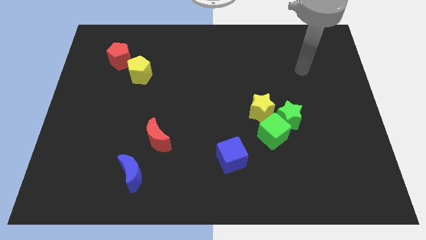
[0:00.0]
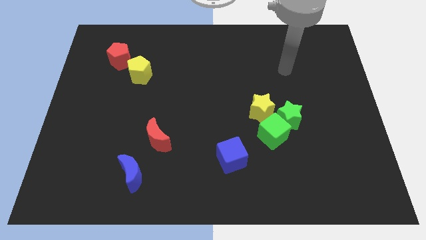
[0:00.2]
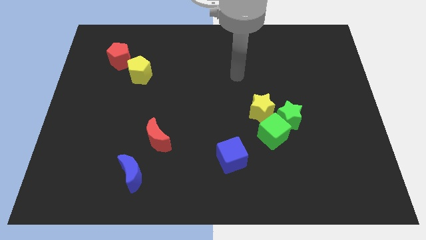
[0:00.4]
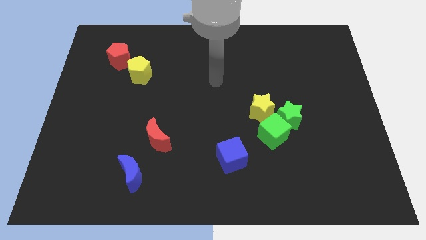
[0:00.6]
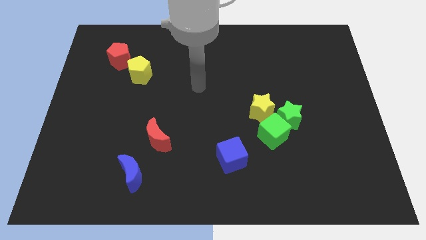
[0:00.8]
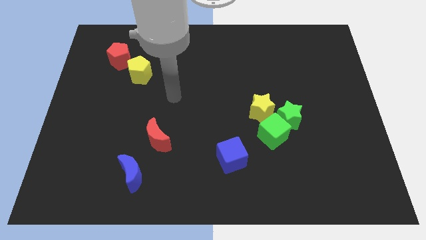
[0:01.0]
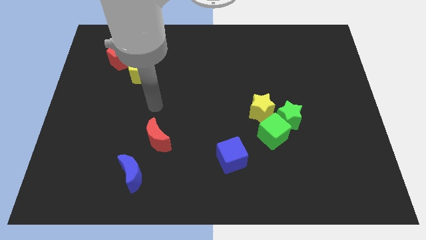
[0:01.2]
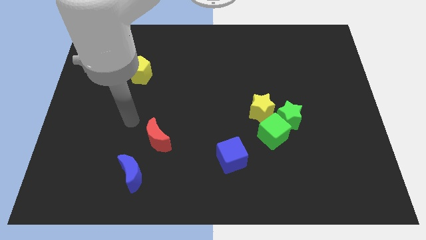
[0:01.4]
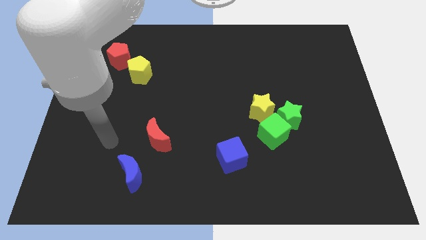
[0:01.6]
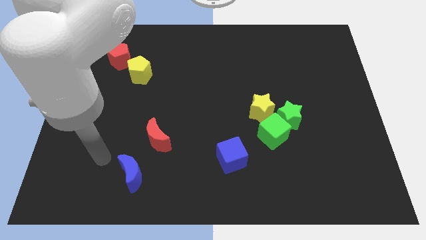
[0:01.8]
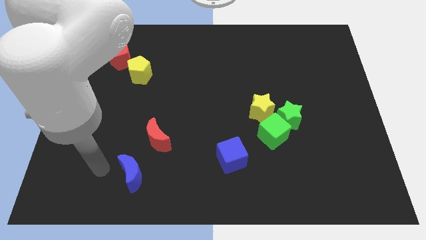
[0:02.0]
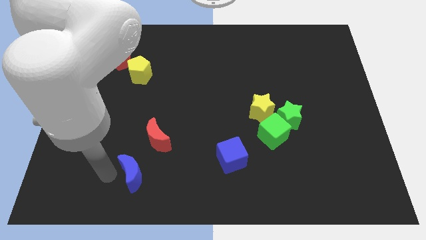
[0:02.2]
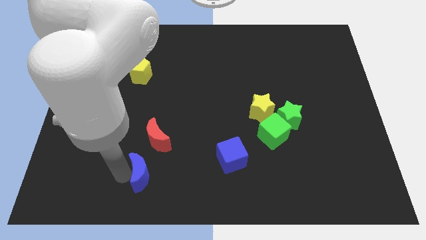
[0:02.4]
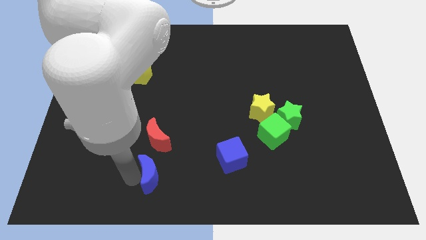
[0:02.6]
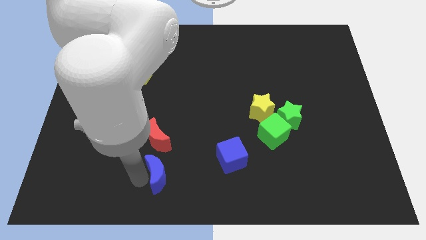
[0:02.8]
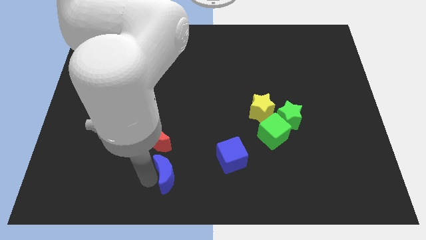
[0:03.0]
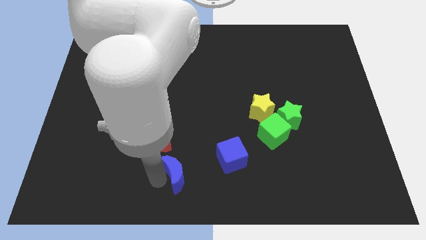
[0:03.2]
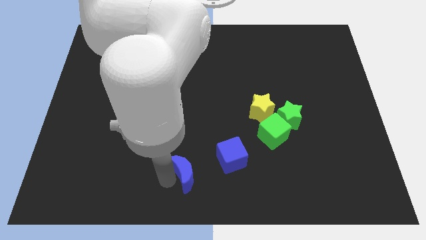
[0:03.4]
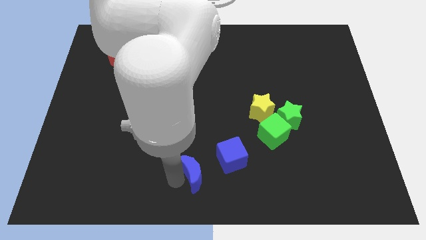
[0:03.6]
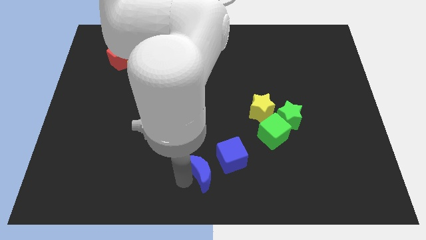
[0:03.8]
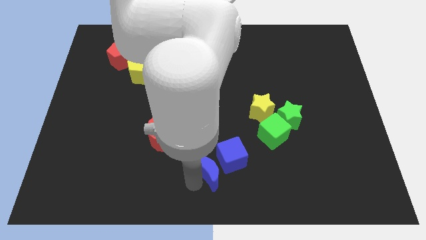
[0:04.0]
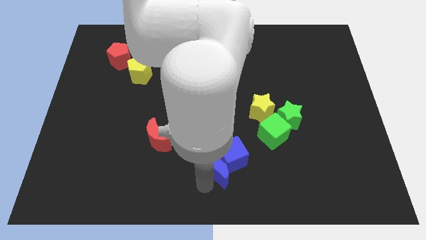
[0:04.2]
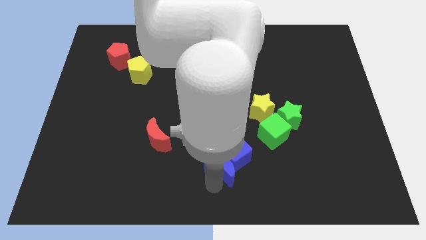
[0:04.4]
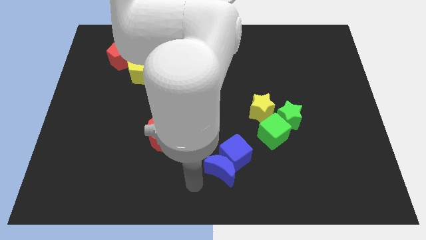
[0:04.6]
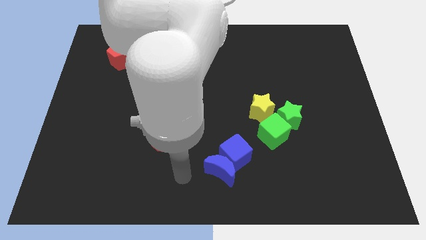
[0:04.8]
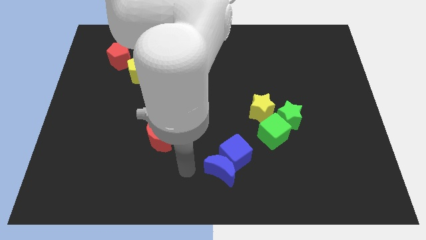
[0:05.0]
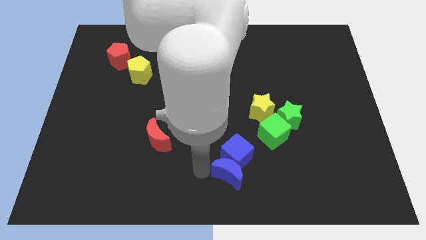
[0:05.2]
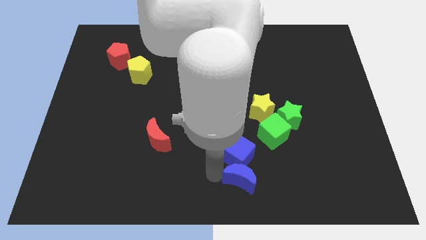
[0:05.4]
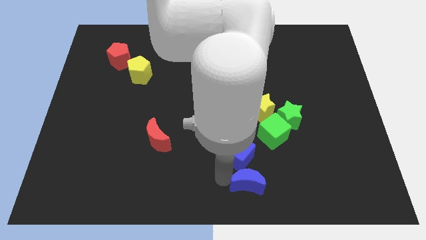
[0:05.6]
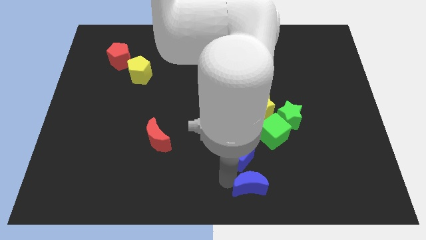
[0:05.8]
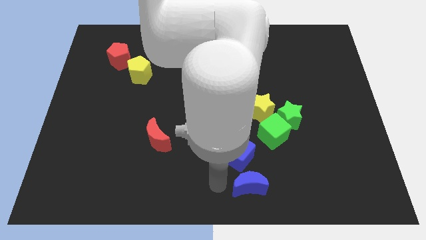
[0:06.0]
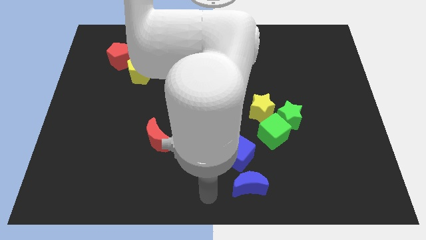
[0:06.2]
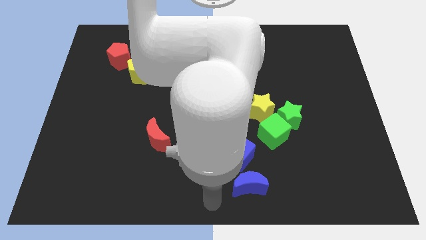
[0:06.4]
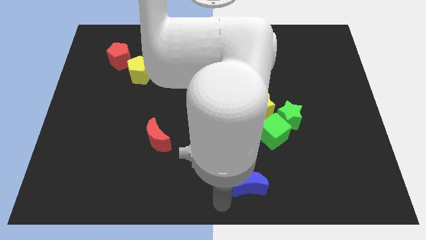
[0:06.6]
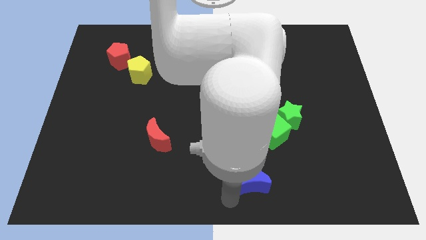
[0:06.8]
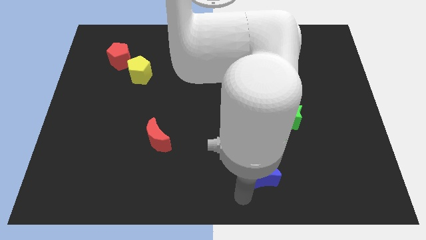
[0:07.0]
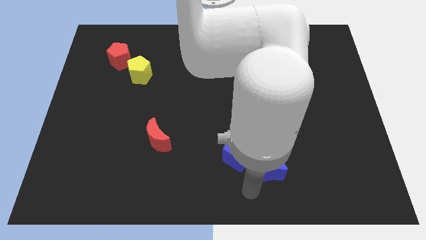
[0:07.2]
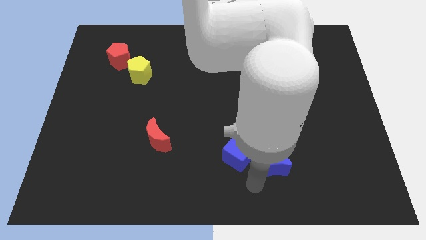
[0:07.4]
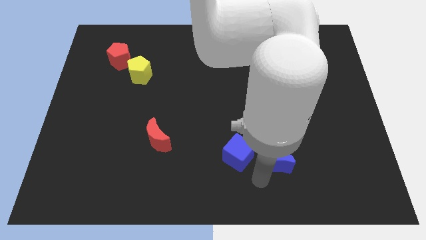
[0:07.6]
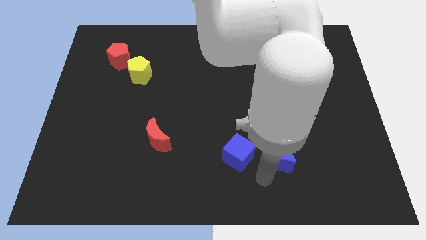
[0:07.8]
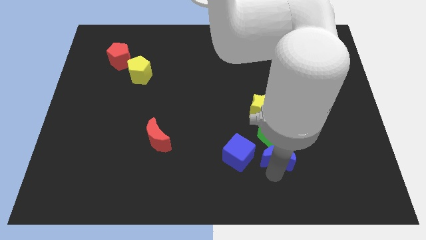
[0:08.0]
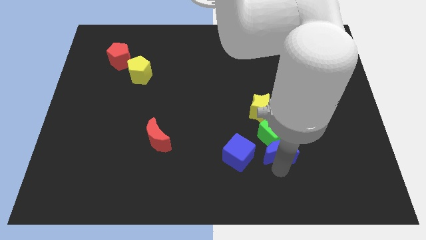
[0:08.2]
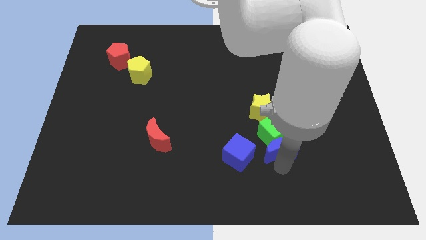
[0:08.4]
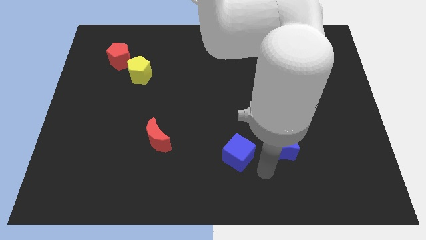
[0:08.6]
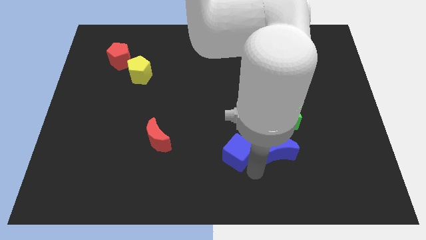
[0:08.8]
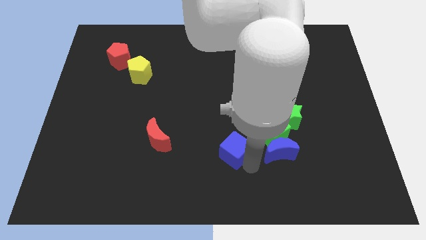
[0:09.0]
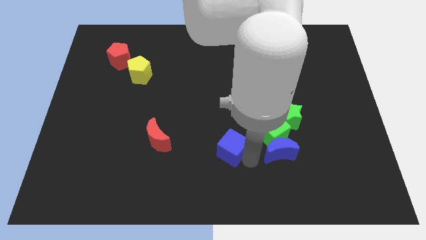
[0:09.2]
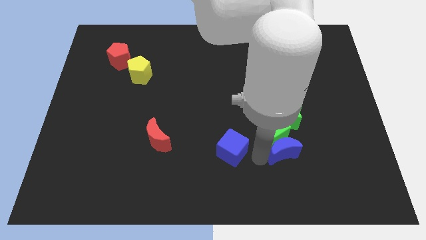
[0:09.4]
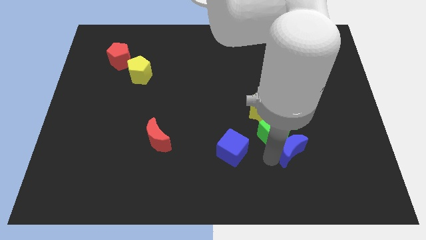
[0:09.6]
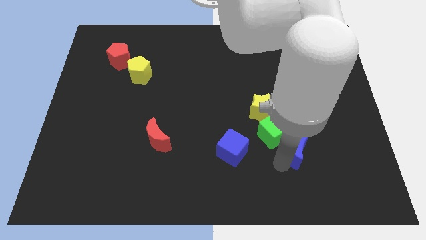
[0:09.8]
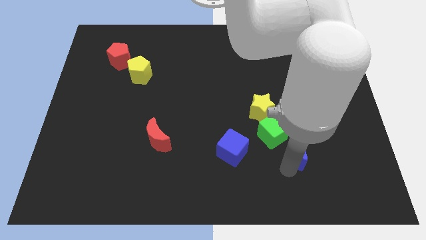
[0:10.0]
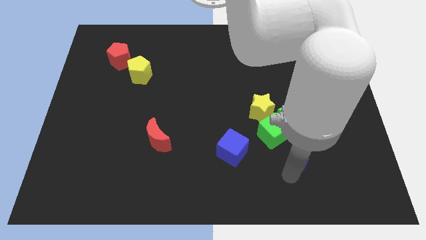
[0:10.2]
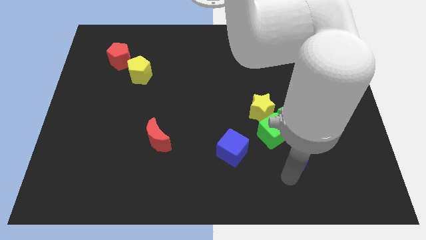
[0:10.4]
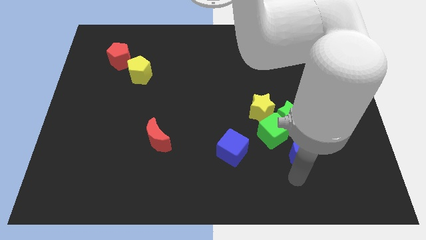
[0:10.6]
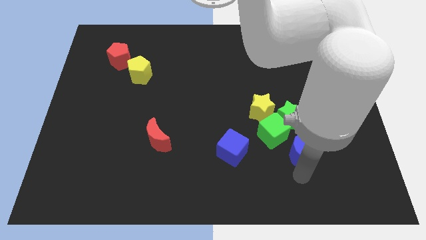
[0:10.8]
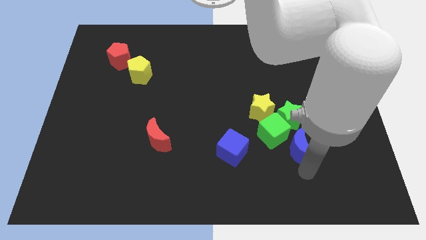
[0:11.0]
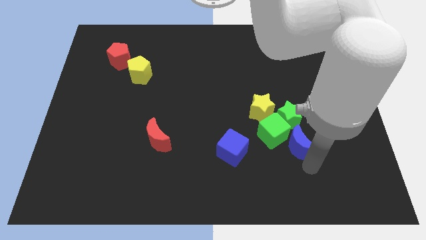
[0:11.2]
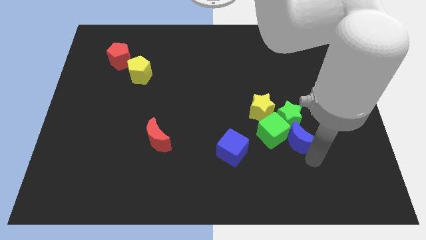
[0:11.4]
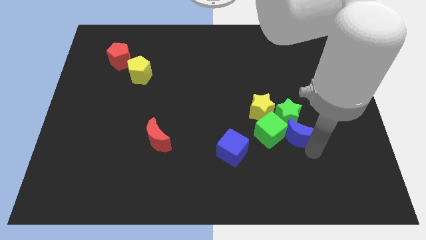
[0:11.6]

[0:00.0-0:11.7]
push the blue moon to the green star

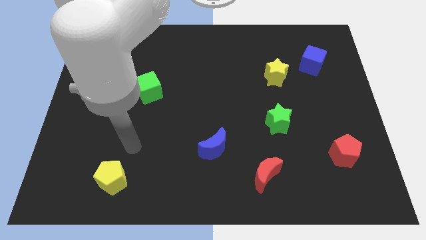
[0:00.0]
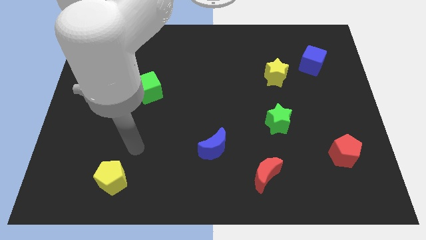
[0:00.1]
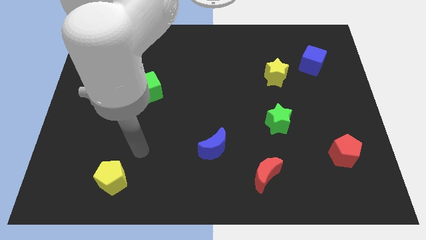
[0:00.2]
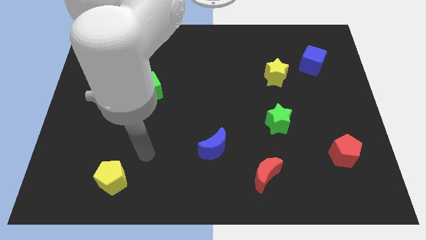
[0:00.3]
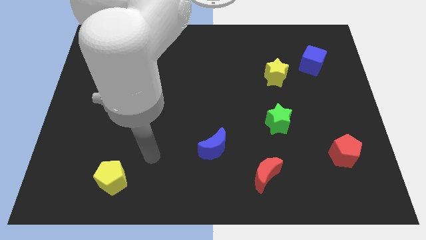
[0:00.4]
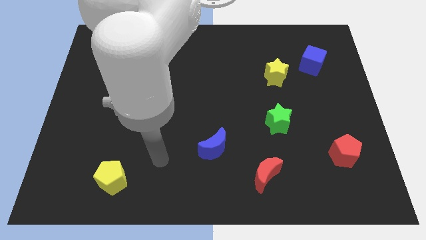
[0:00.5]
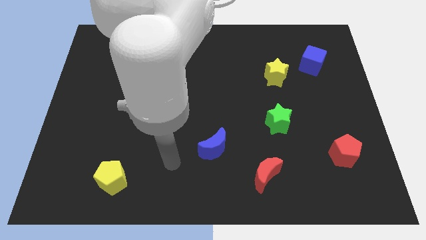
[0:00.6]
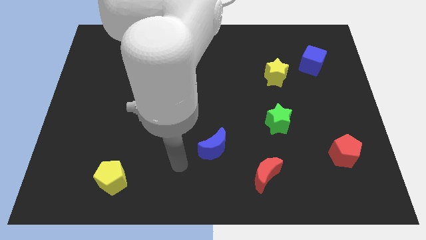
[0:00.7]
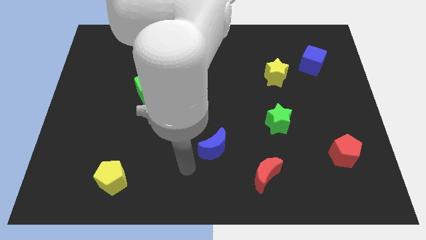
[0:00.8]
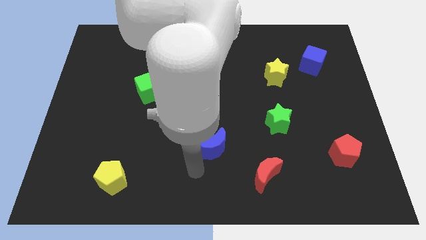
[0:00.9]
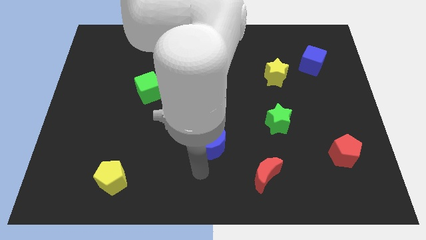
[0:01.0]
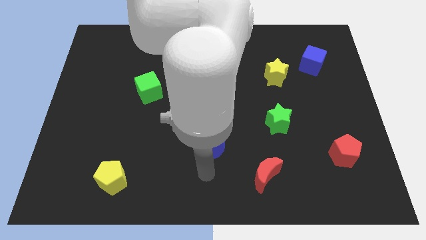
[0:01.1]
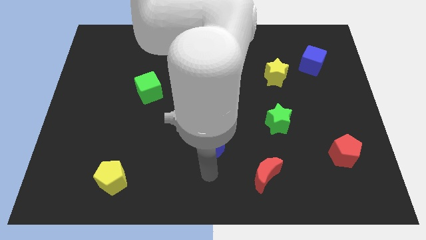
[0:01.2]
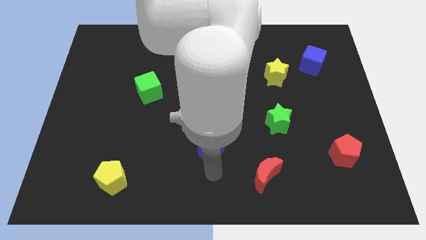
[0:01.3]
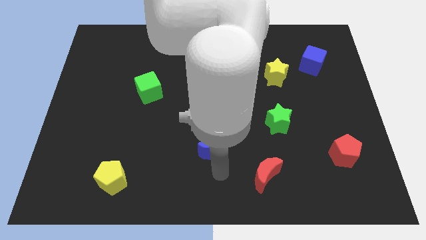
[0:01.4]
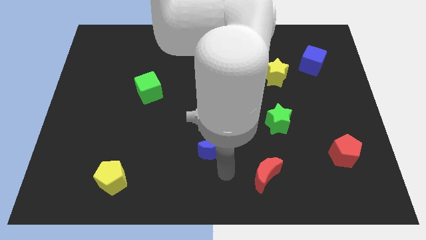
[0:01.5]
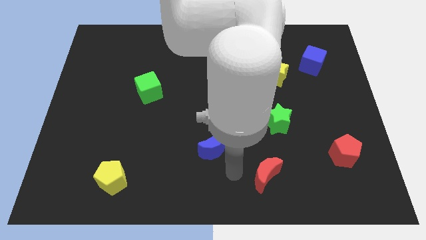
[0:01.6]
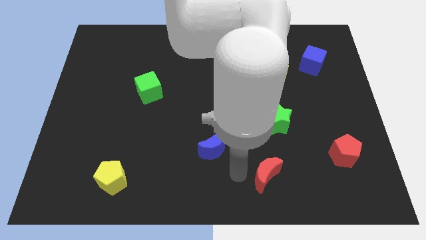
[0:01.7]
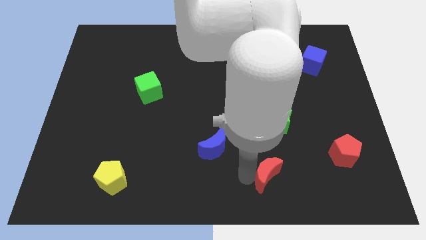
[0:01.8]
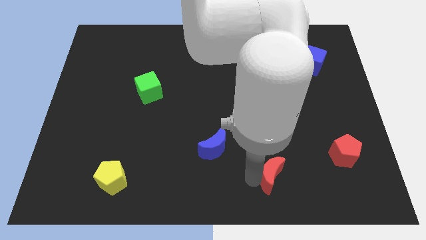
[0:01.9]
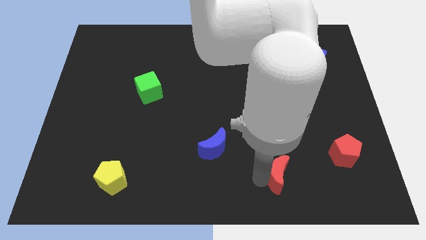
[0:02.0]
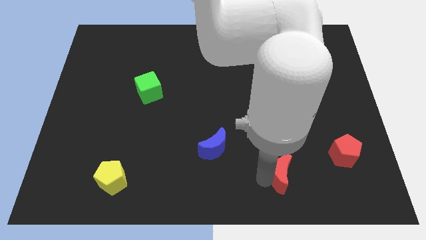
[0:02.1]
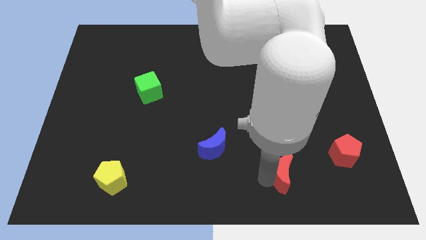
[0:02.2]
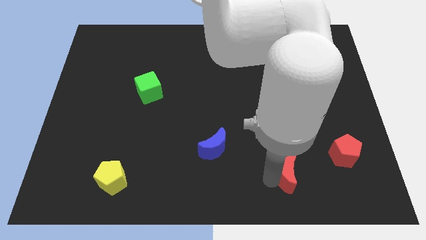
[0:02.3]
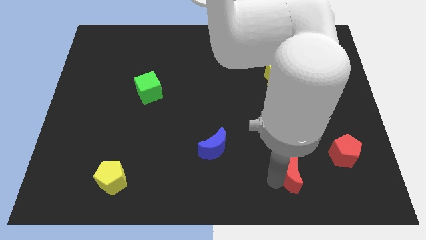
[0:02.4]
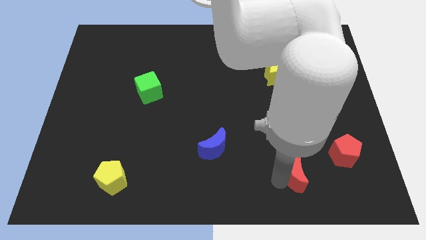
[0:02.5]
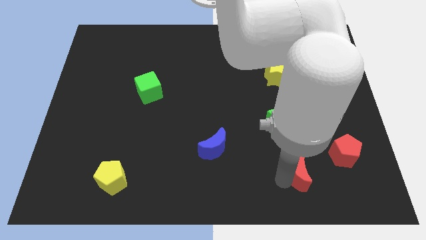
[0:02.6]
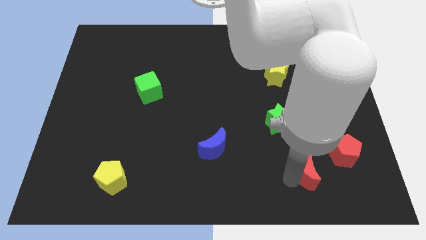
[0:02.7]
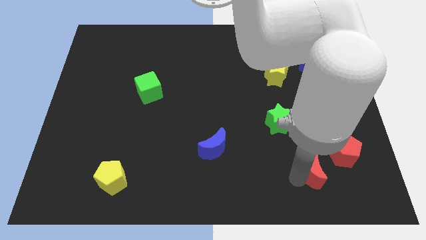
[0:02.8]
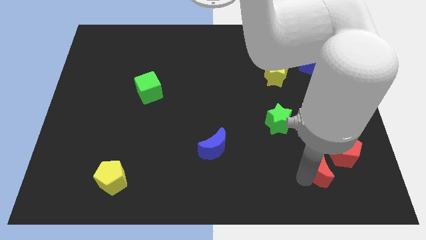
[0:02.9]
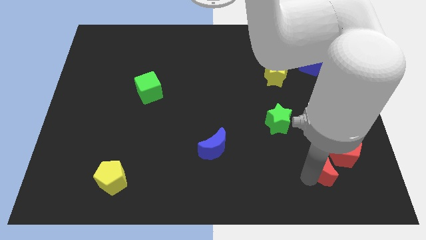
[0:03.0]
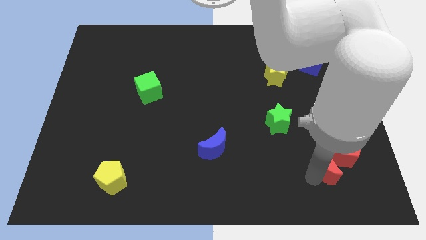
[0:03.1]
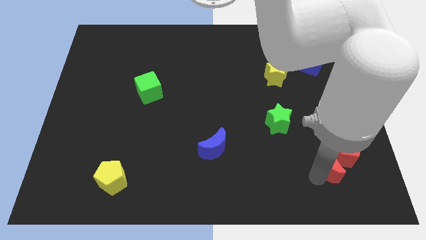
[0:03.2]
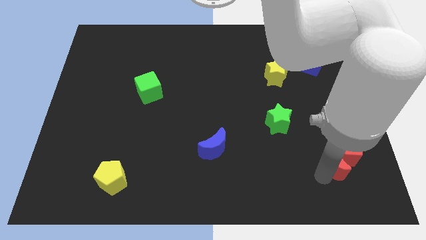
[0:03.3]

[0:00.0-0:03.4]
slide the red moon close to the red pentagon
